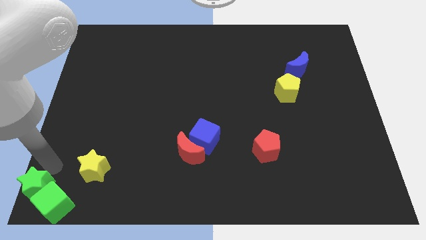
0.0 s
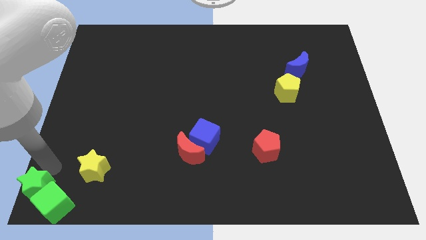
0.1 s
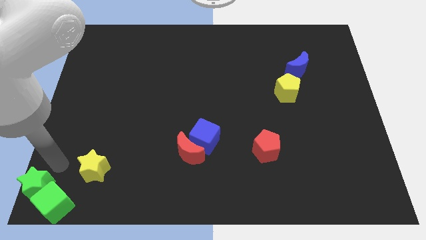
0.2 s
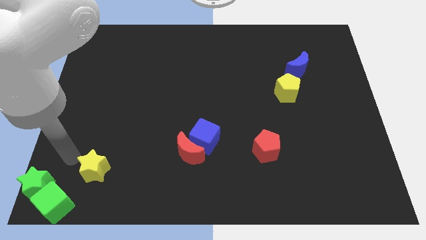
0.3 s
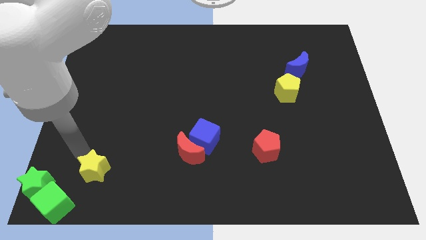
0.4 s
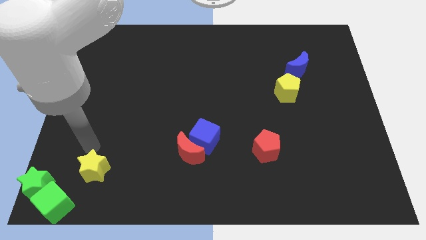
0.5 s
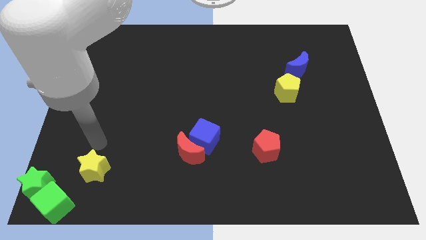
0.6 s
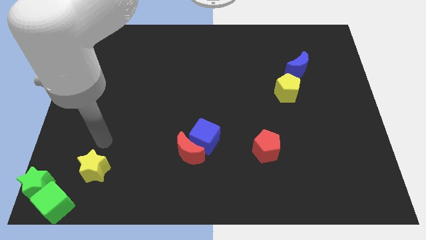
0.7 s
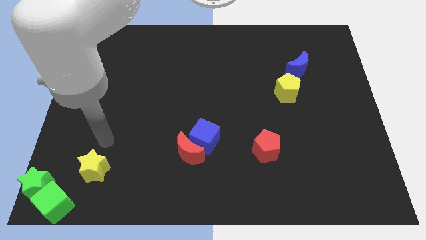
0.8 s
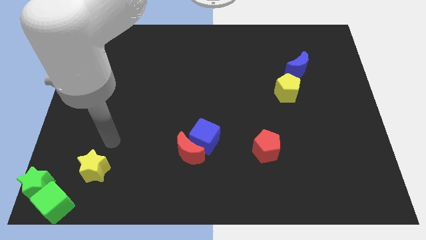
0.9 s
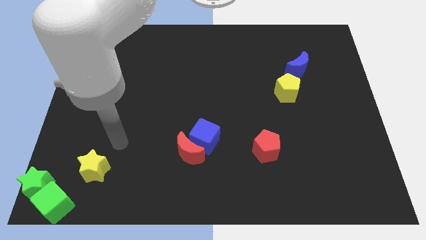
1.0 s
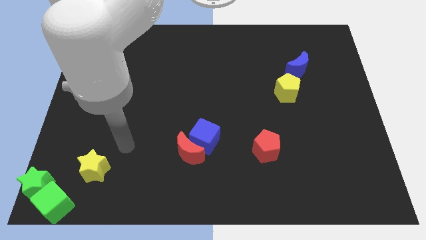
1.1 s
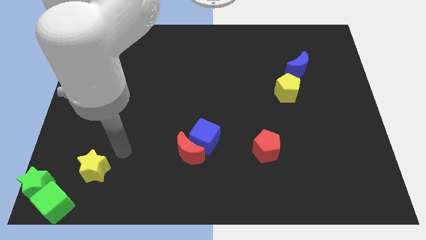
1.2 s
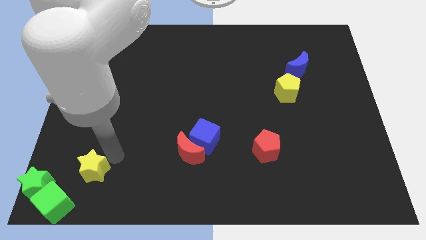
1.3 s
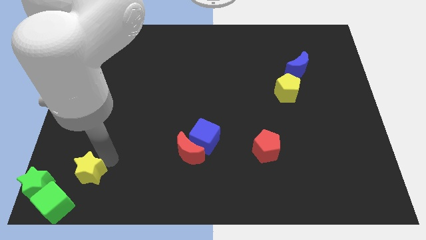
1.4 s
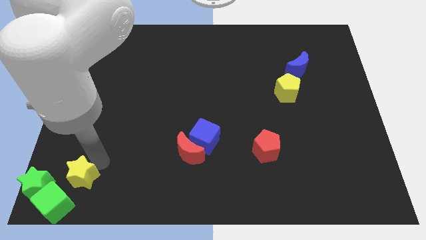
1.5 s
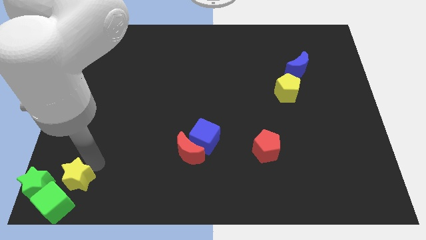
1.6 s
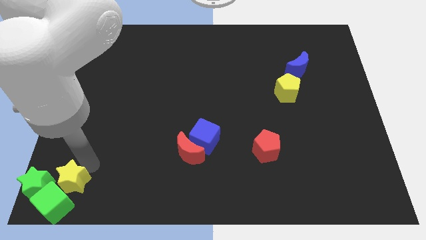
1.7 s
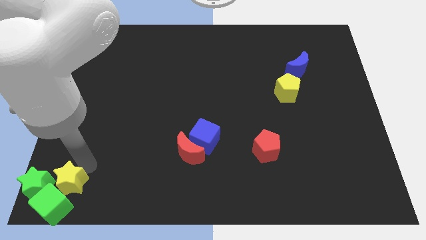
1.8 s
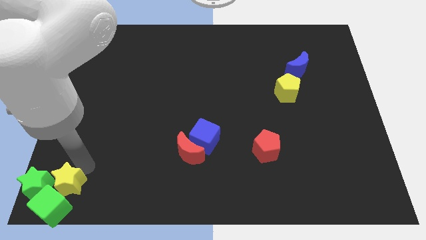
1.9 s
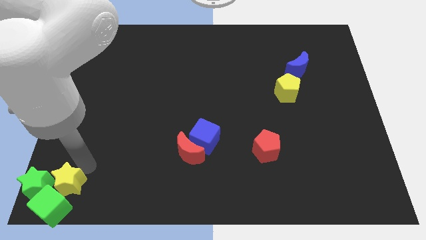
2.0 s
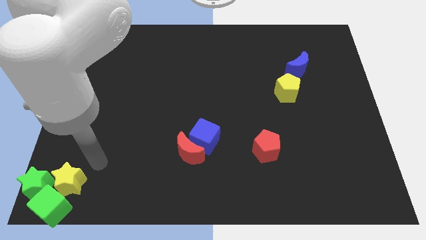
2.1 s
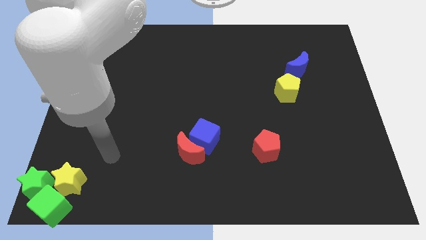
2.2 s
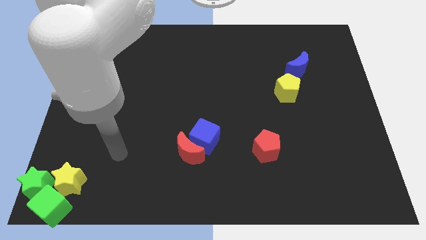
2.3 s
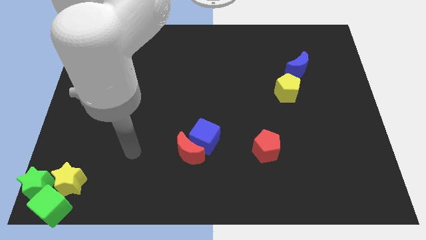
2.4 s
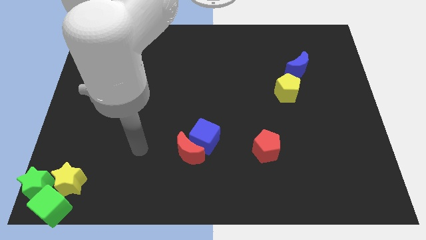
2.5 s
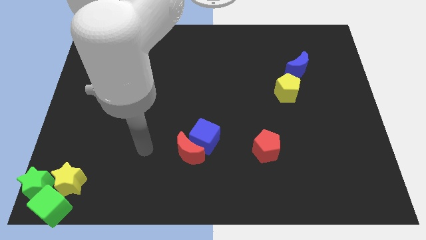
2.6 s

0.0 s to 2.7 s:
push yellow star towards the right of the green star

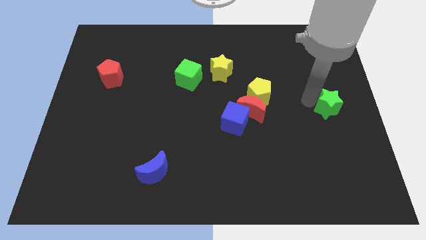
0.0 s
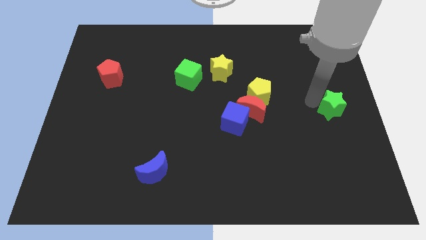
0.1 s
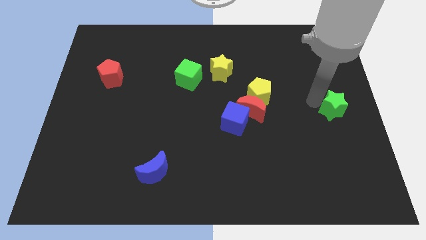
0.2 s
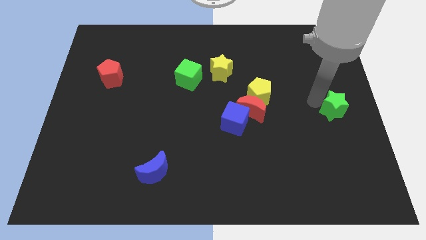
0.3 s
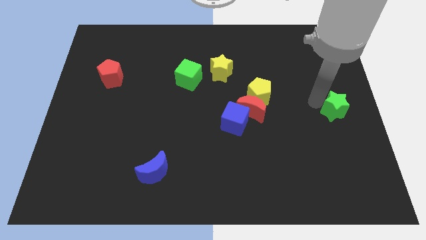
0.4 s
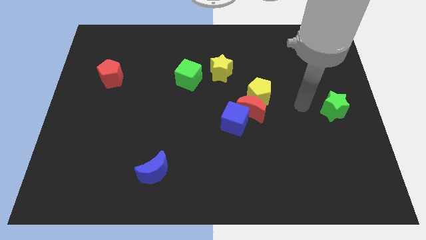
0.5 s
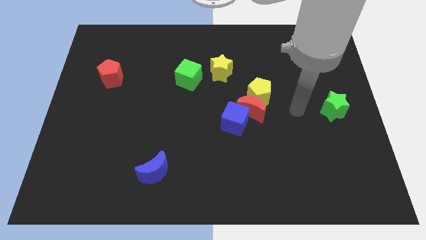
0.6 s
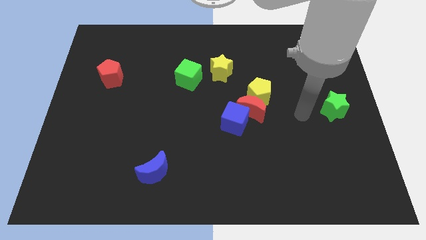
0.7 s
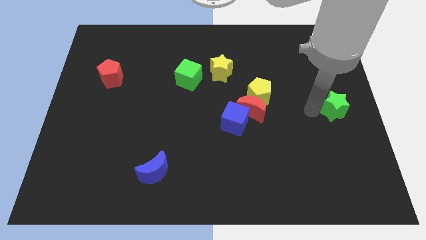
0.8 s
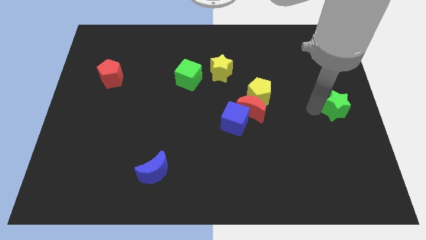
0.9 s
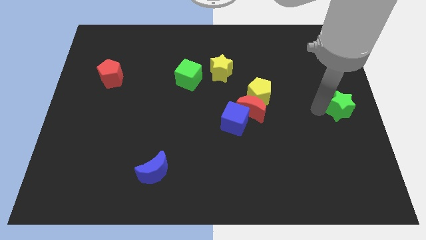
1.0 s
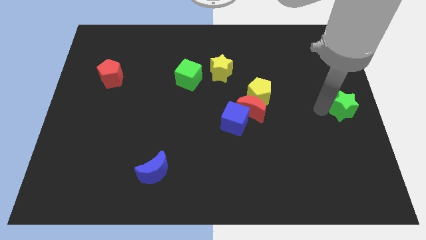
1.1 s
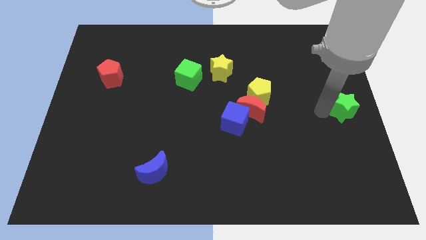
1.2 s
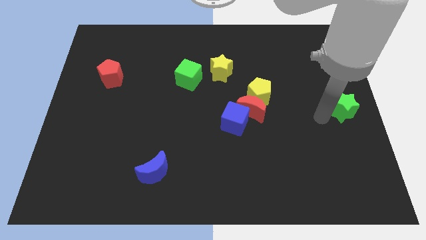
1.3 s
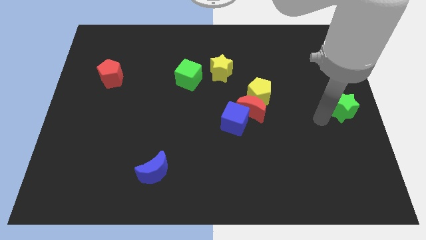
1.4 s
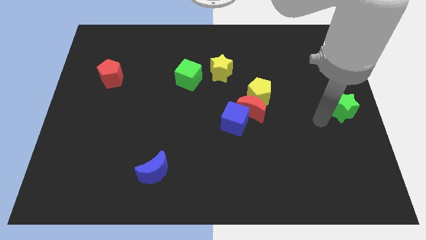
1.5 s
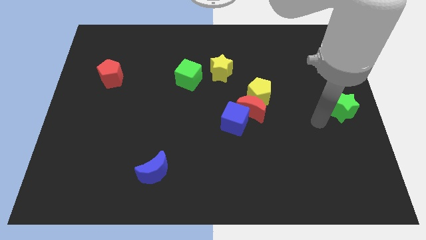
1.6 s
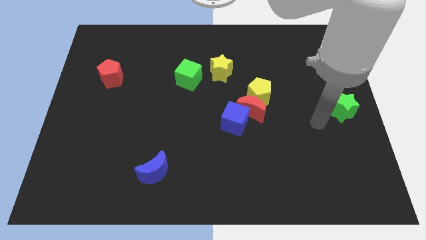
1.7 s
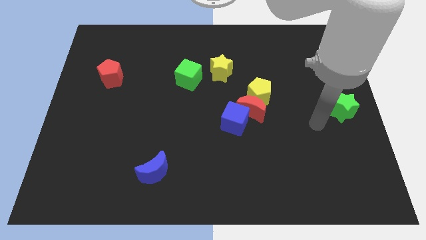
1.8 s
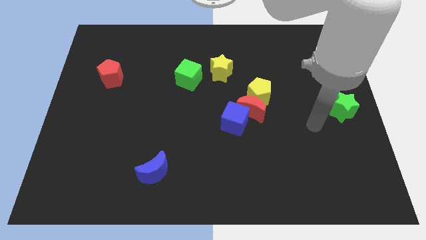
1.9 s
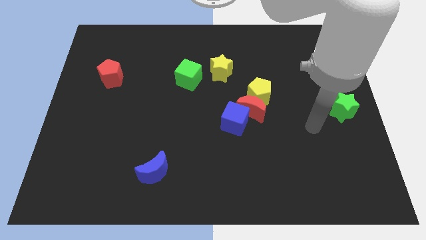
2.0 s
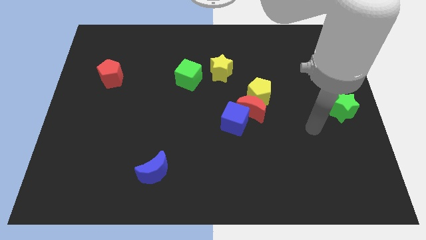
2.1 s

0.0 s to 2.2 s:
put the green star at the center right

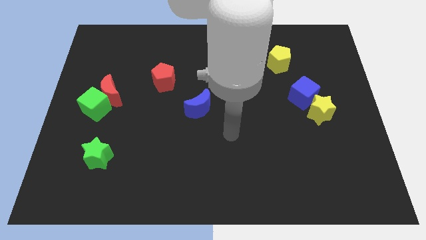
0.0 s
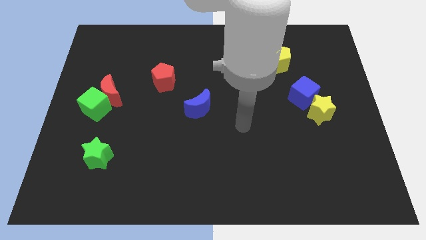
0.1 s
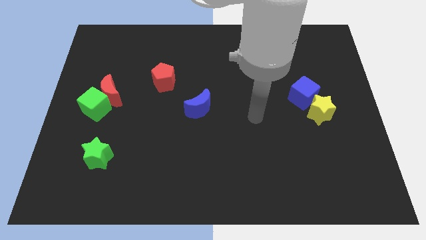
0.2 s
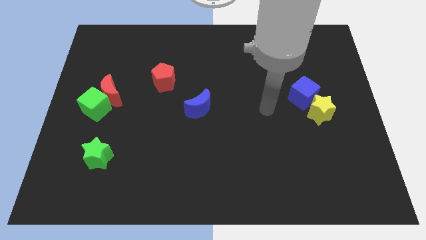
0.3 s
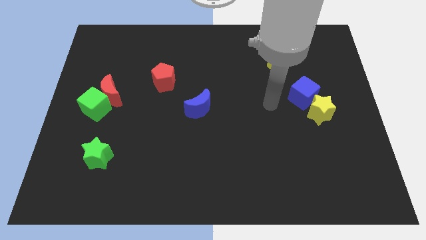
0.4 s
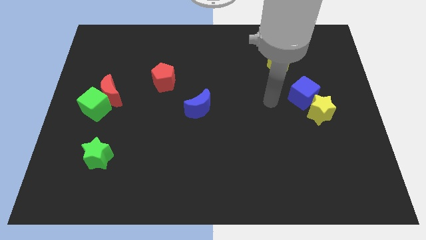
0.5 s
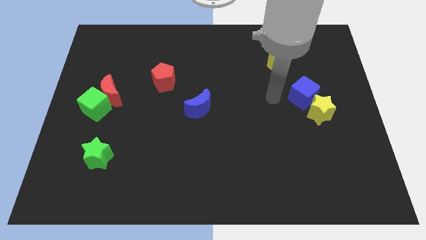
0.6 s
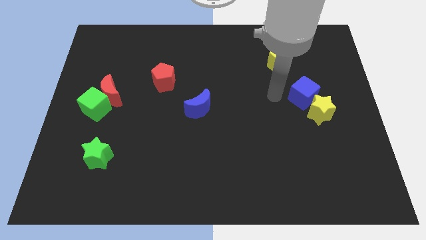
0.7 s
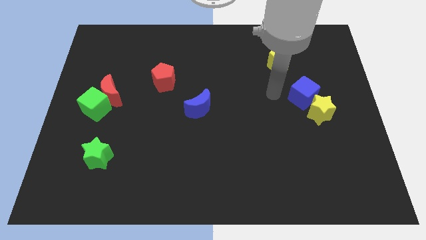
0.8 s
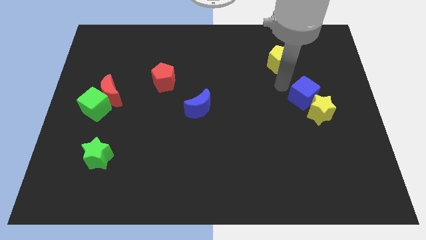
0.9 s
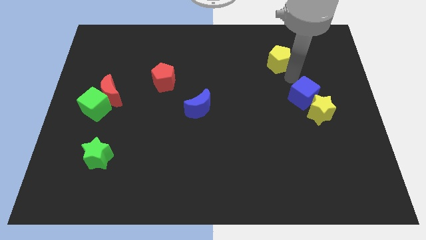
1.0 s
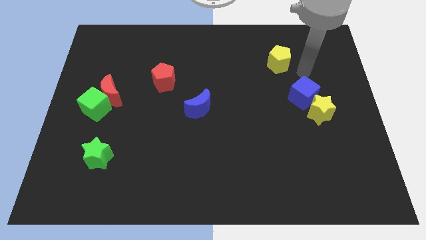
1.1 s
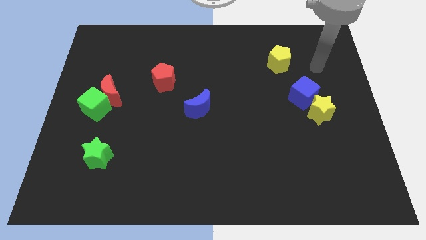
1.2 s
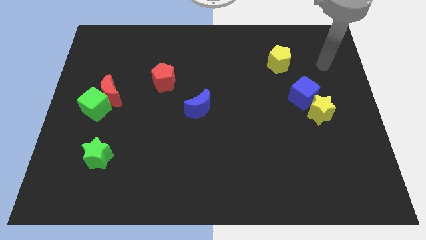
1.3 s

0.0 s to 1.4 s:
move arm to the top right of the board

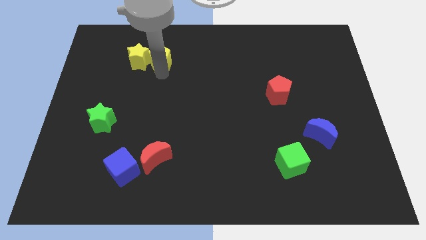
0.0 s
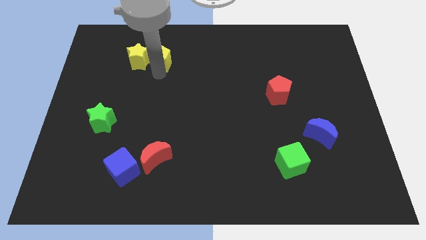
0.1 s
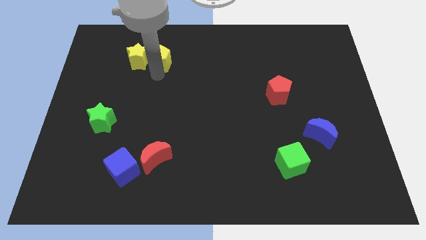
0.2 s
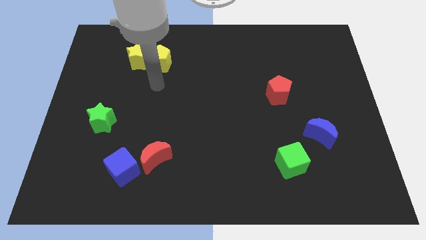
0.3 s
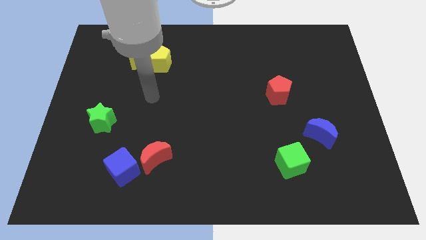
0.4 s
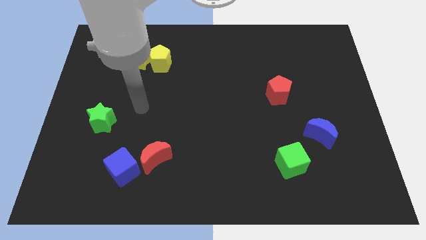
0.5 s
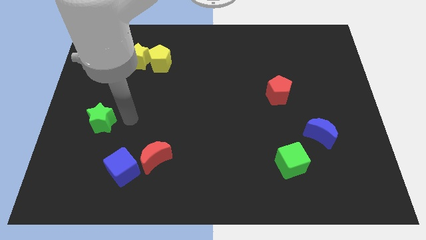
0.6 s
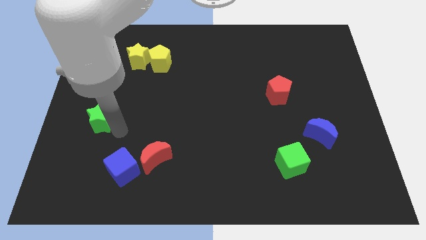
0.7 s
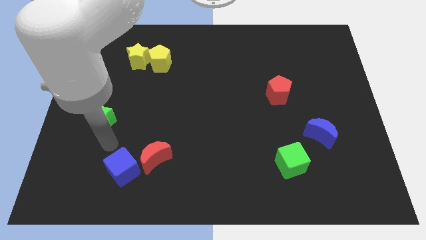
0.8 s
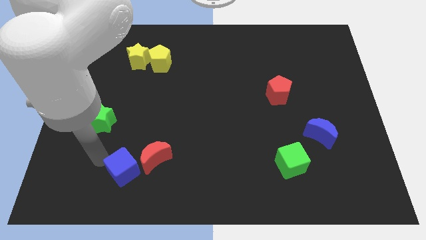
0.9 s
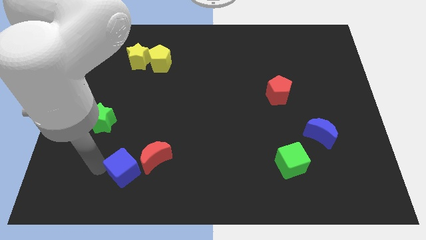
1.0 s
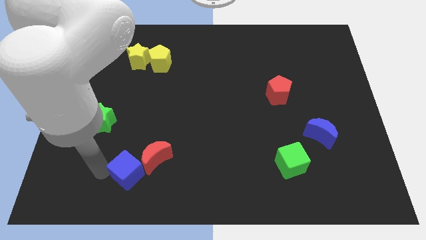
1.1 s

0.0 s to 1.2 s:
move your arm to the left of the blue cube

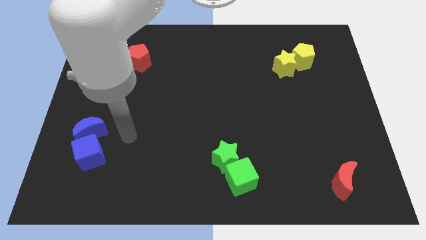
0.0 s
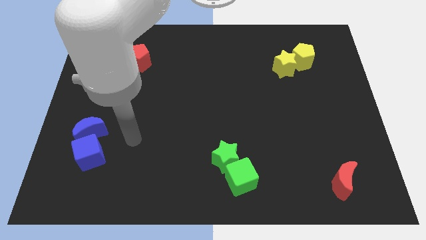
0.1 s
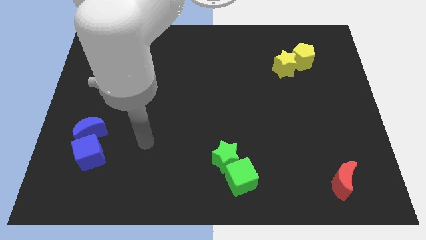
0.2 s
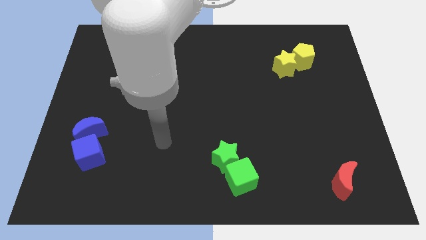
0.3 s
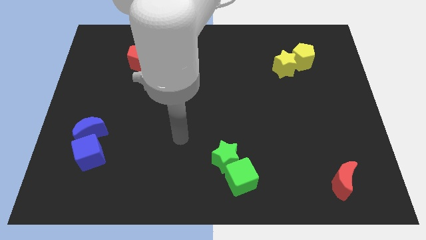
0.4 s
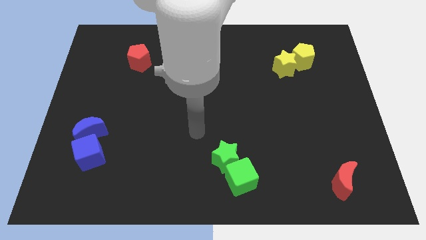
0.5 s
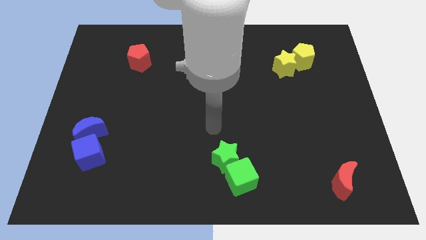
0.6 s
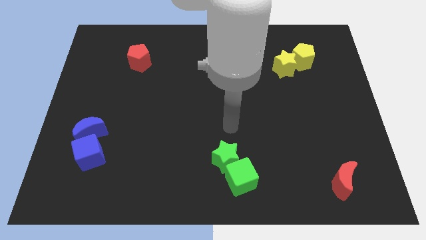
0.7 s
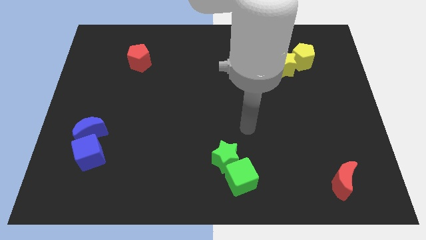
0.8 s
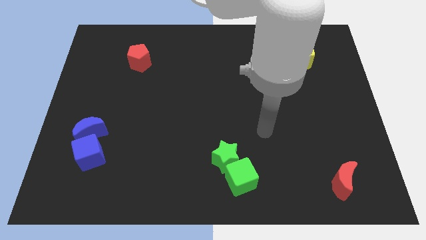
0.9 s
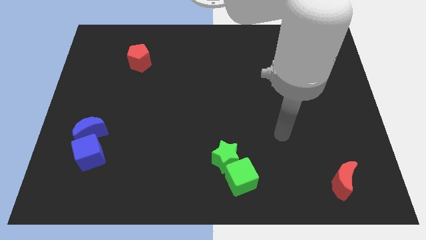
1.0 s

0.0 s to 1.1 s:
move your arm away from blue blocks

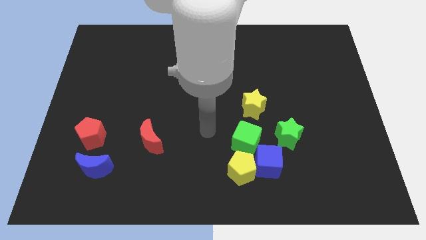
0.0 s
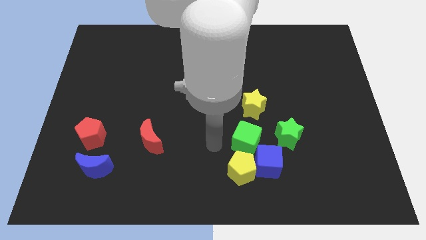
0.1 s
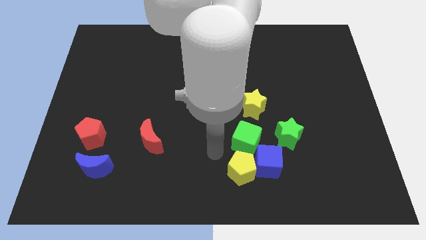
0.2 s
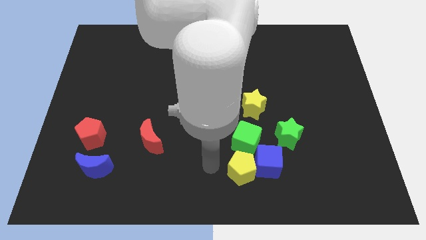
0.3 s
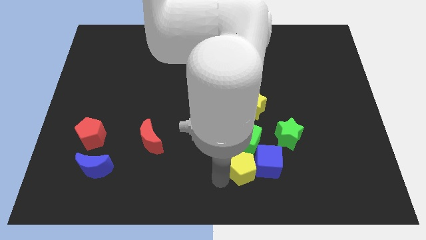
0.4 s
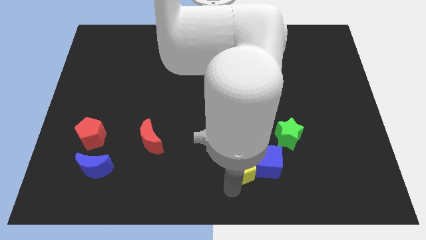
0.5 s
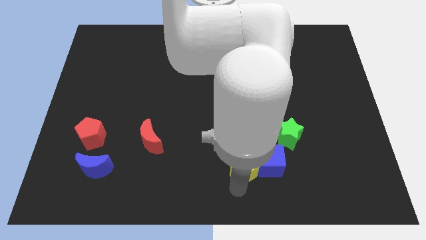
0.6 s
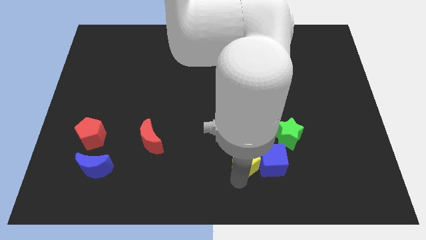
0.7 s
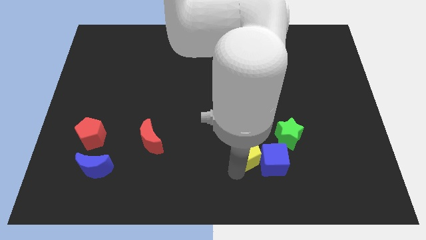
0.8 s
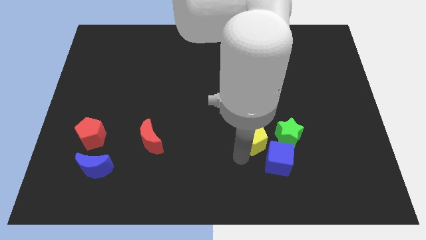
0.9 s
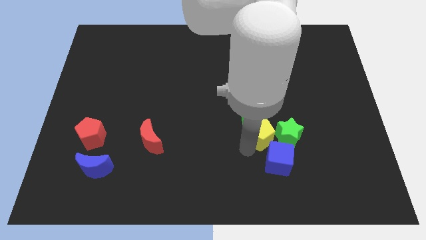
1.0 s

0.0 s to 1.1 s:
push yellow pentagon into green cube
